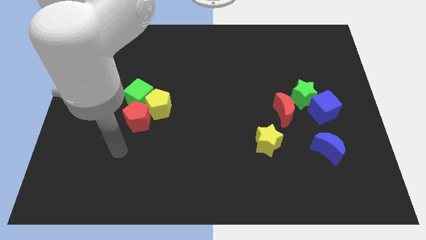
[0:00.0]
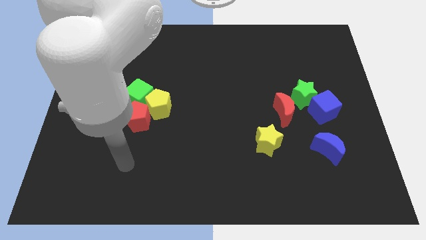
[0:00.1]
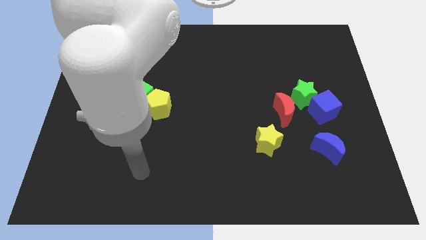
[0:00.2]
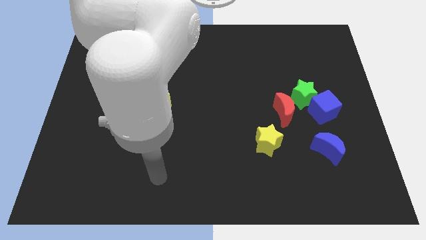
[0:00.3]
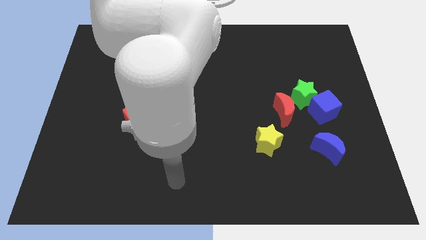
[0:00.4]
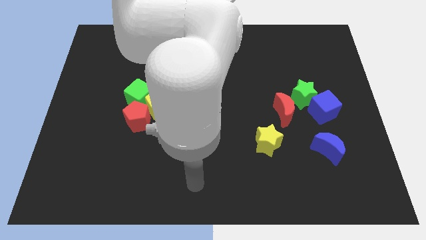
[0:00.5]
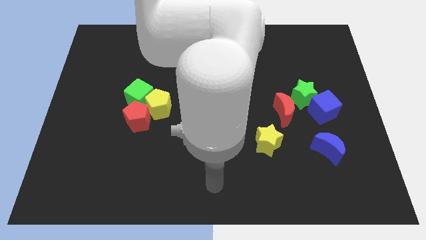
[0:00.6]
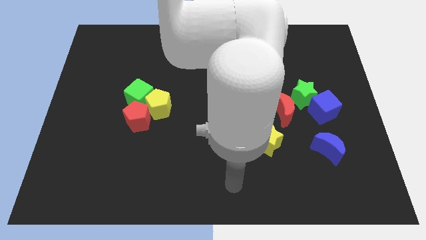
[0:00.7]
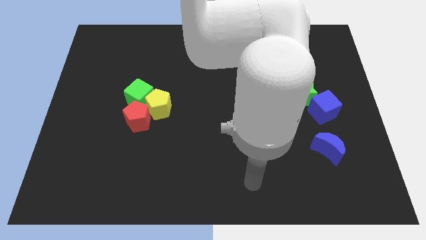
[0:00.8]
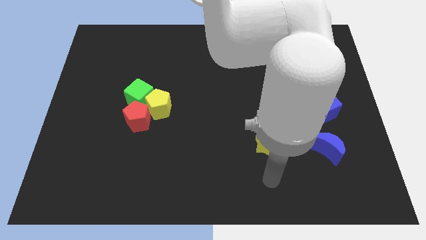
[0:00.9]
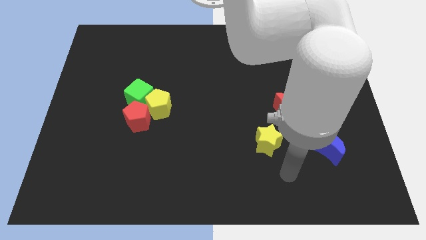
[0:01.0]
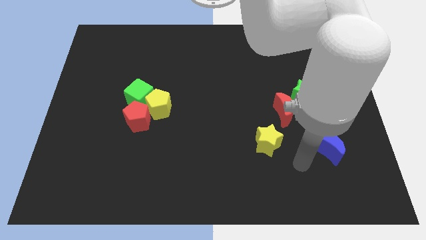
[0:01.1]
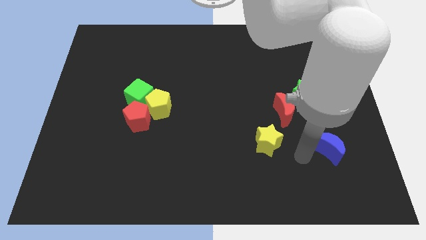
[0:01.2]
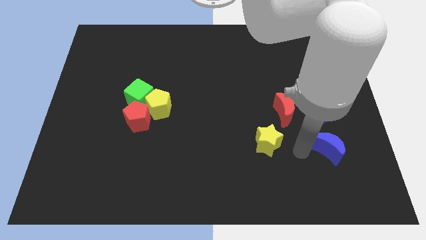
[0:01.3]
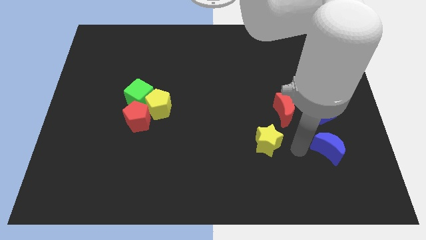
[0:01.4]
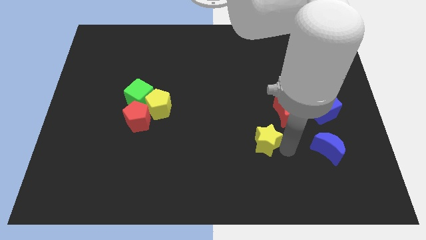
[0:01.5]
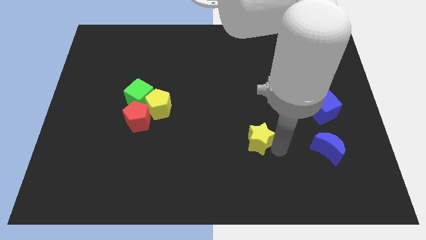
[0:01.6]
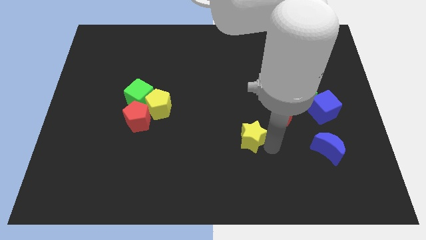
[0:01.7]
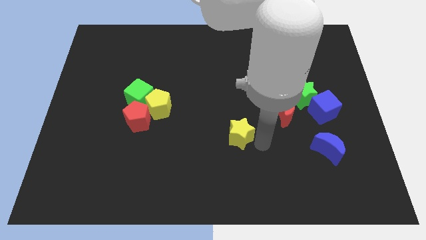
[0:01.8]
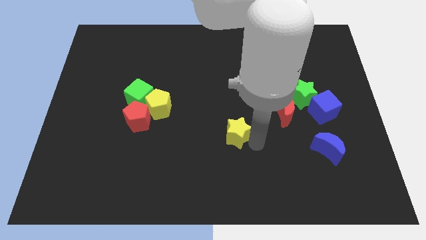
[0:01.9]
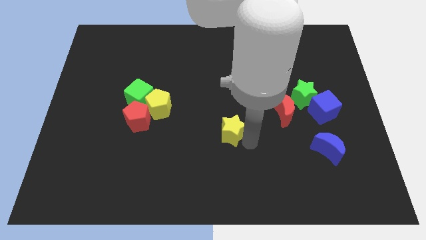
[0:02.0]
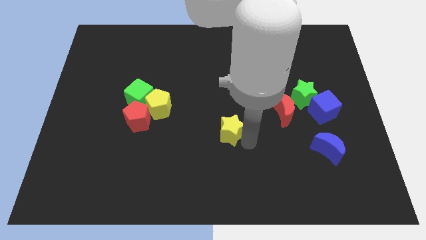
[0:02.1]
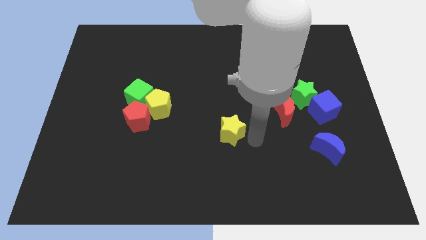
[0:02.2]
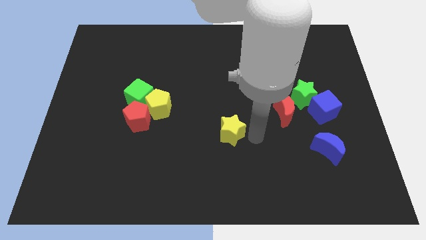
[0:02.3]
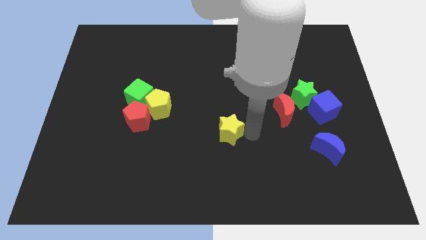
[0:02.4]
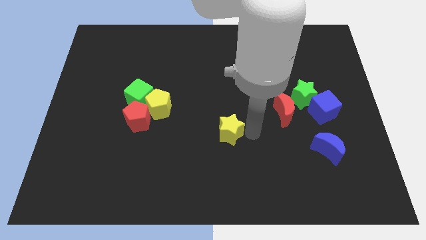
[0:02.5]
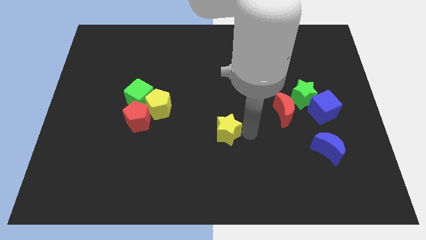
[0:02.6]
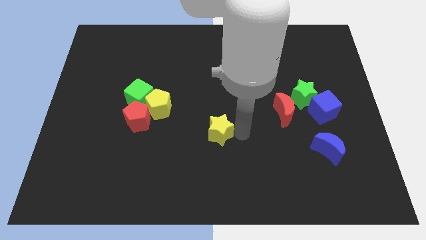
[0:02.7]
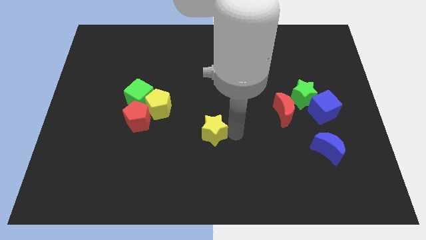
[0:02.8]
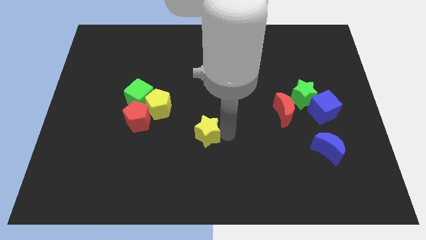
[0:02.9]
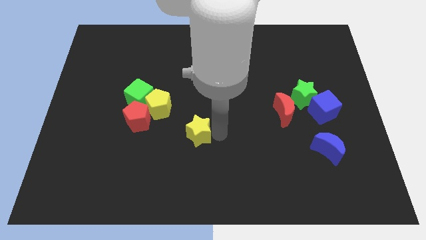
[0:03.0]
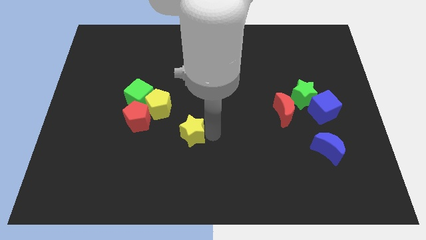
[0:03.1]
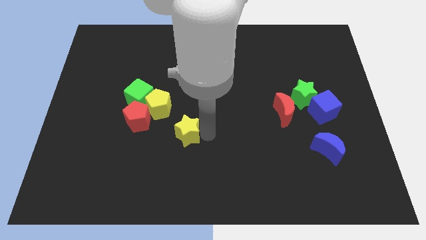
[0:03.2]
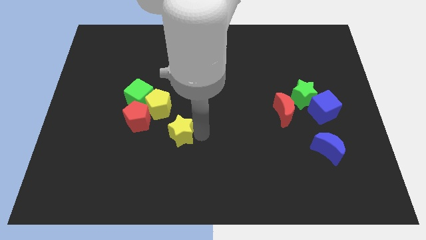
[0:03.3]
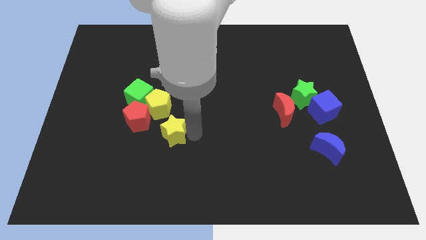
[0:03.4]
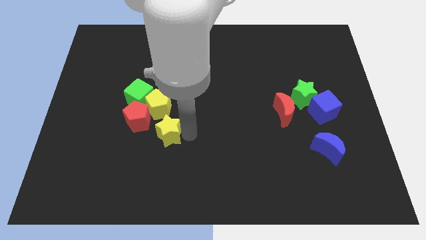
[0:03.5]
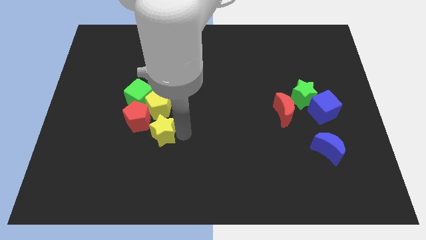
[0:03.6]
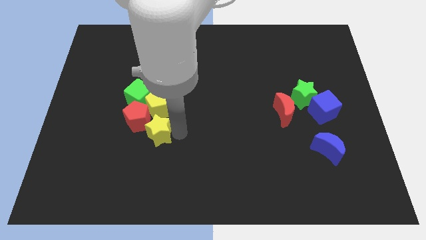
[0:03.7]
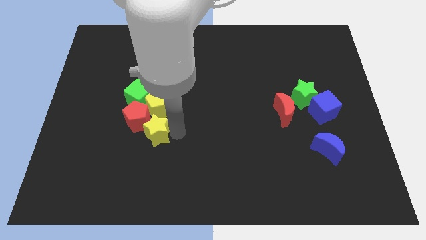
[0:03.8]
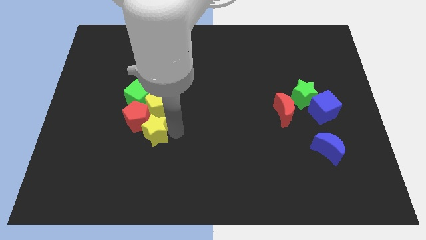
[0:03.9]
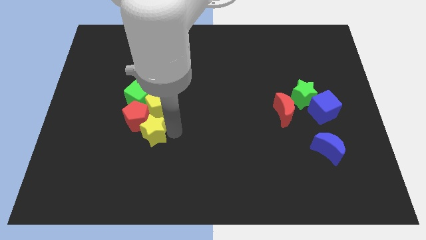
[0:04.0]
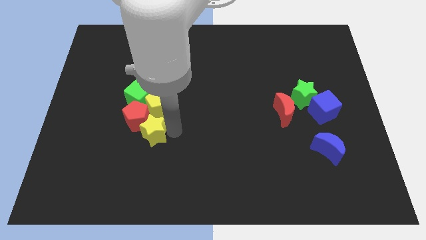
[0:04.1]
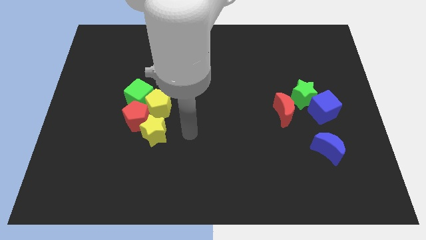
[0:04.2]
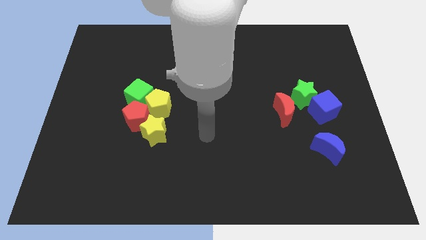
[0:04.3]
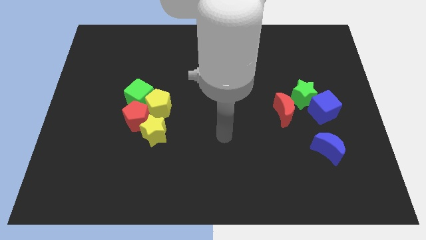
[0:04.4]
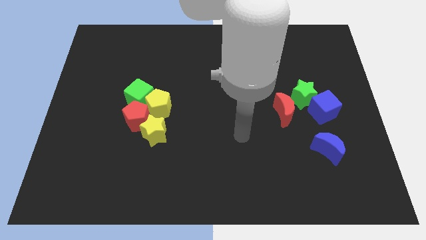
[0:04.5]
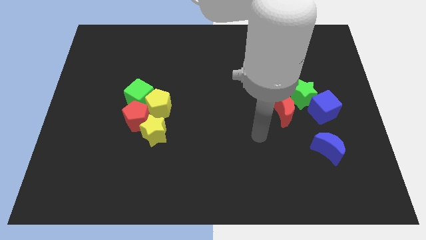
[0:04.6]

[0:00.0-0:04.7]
push the yellow star into the red pentagon

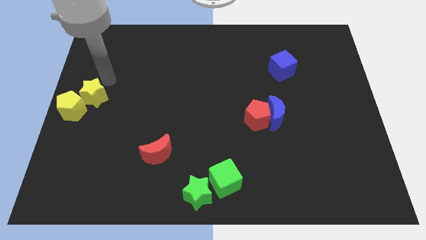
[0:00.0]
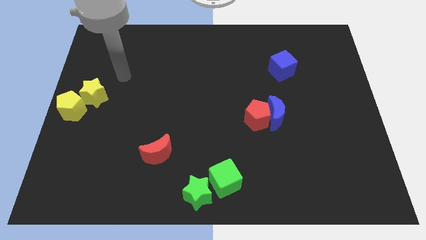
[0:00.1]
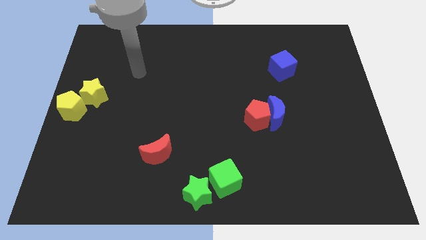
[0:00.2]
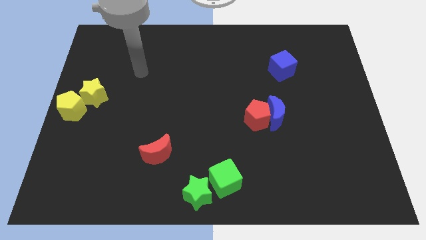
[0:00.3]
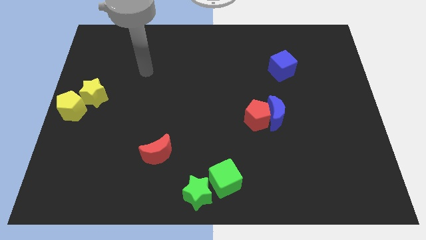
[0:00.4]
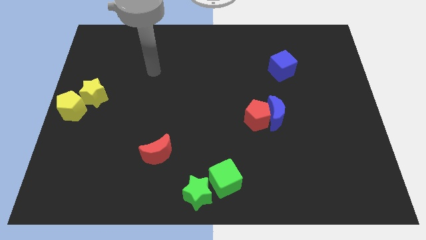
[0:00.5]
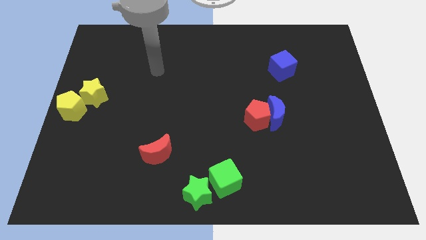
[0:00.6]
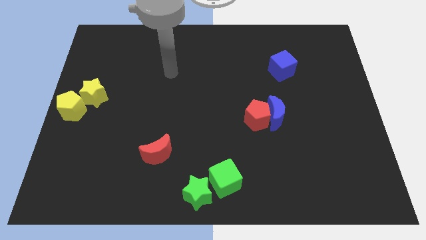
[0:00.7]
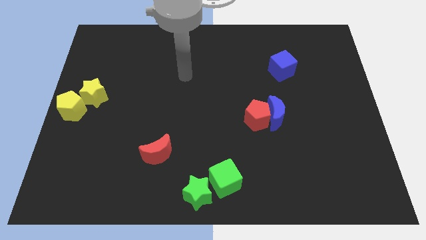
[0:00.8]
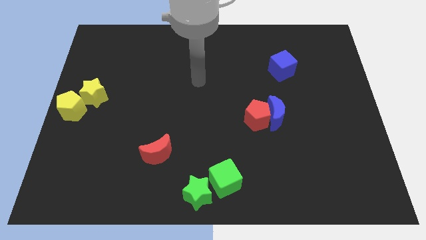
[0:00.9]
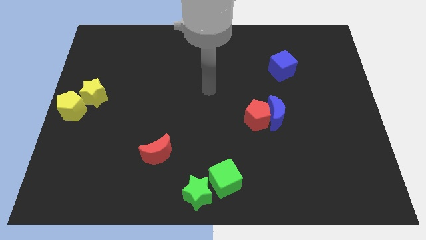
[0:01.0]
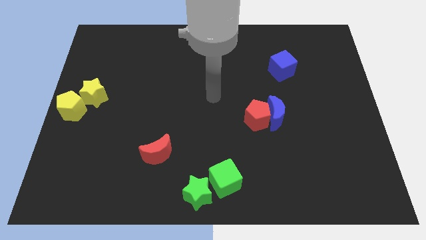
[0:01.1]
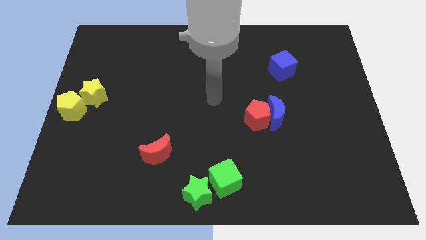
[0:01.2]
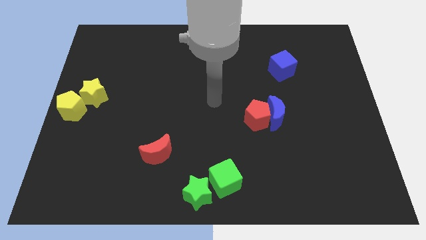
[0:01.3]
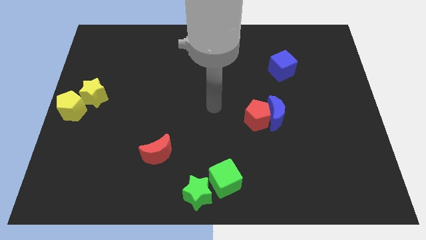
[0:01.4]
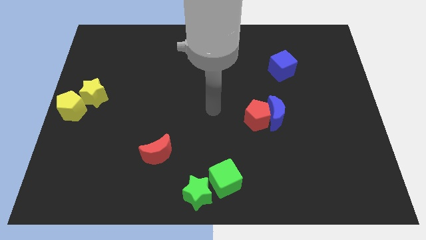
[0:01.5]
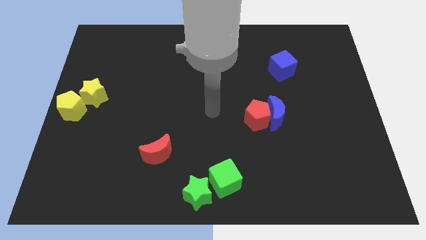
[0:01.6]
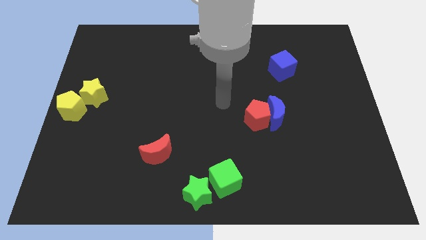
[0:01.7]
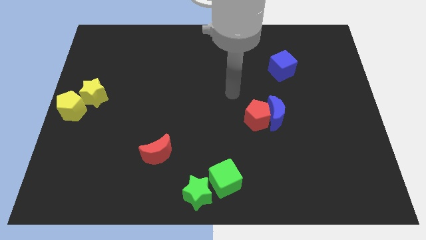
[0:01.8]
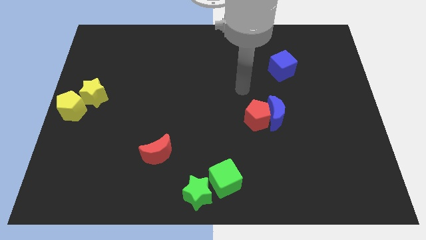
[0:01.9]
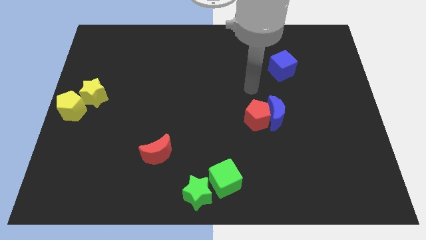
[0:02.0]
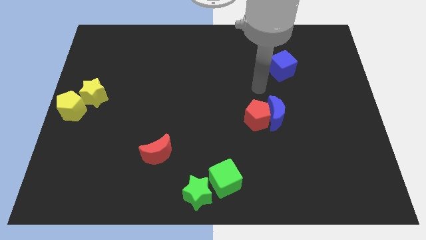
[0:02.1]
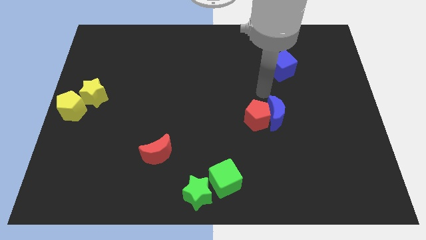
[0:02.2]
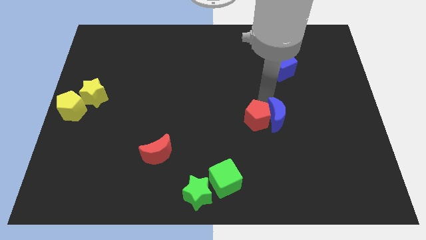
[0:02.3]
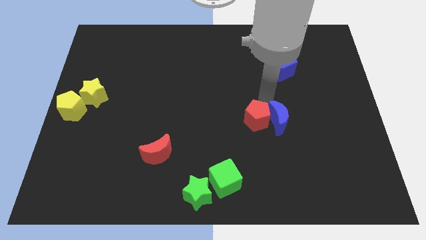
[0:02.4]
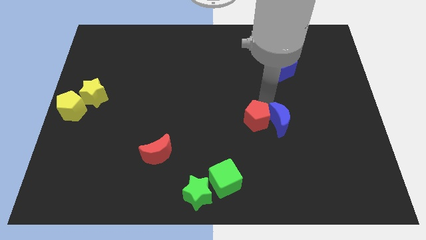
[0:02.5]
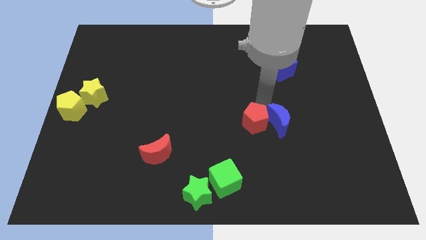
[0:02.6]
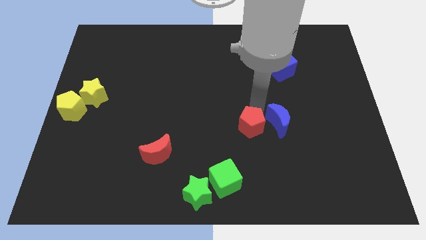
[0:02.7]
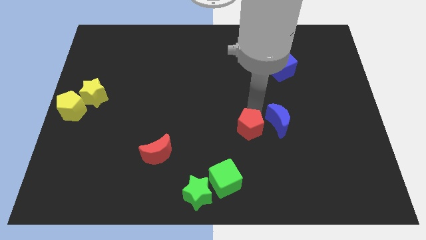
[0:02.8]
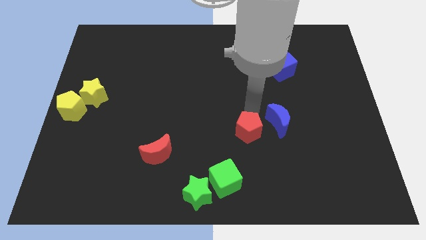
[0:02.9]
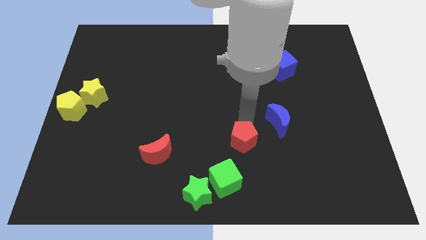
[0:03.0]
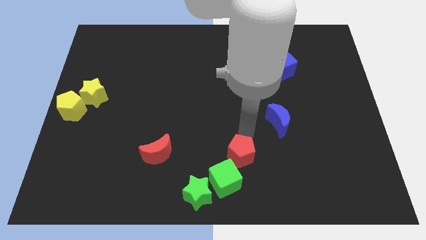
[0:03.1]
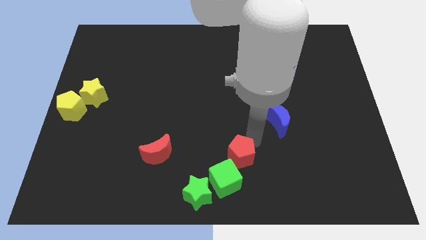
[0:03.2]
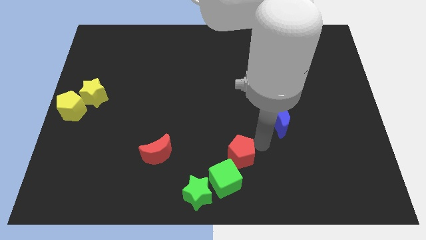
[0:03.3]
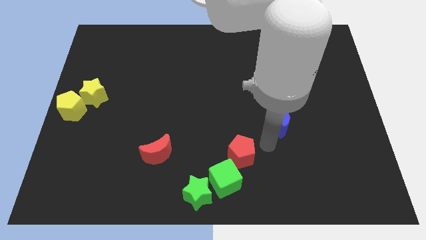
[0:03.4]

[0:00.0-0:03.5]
place the red pentagon at the top side of the green cube

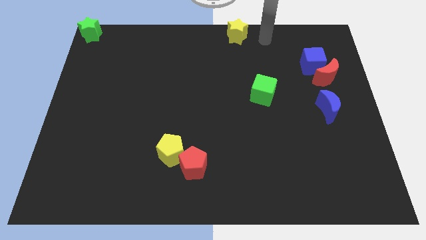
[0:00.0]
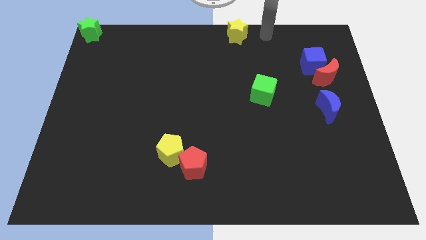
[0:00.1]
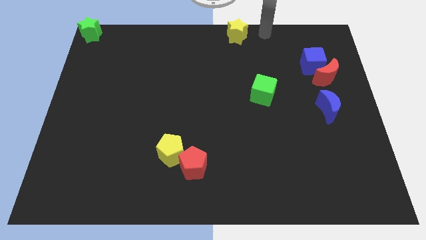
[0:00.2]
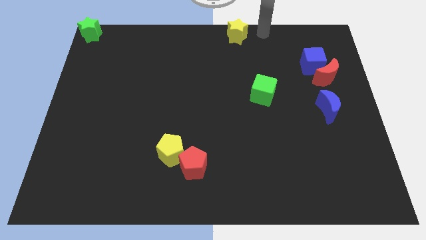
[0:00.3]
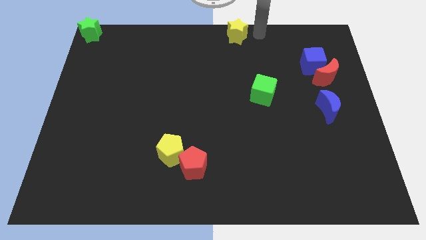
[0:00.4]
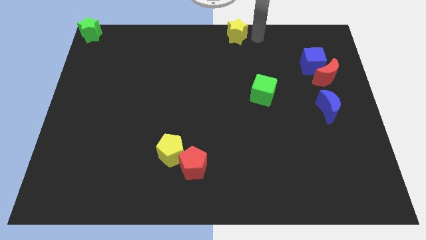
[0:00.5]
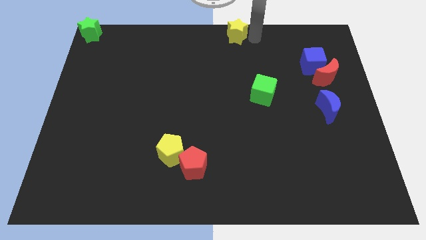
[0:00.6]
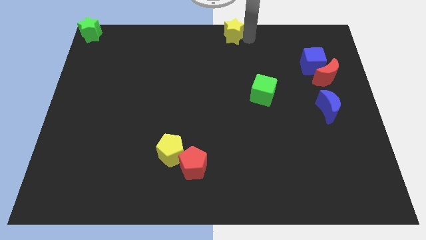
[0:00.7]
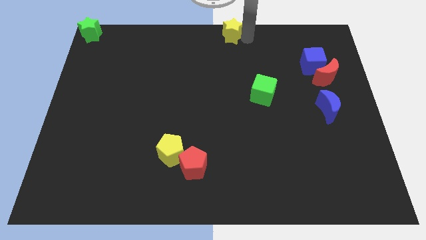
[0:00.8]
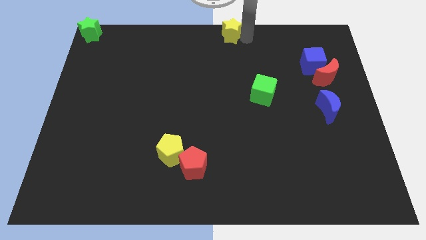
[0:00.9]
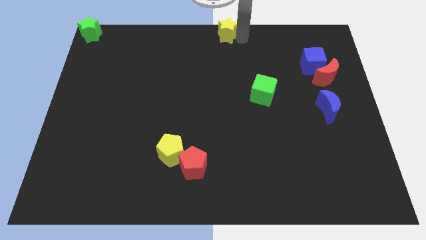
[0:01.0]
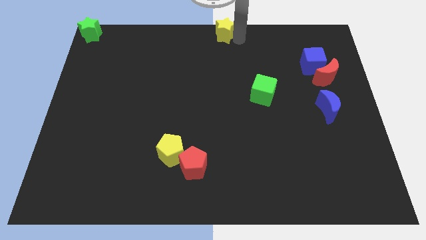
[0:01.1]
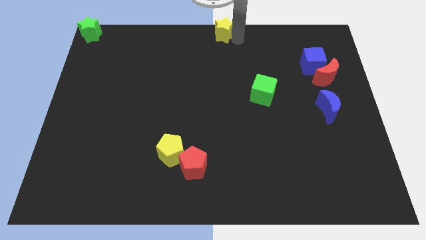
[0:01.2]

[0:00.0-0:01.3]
push the yellow star slightly left
